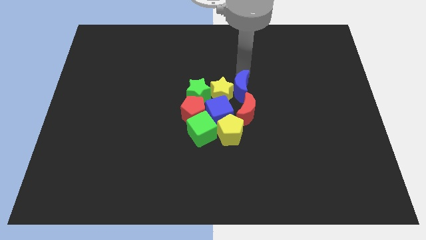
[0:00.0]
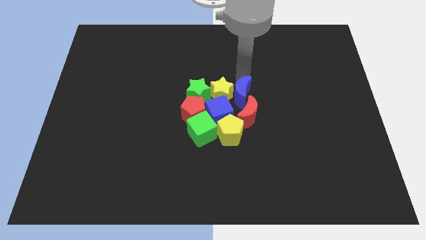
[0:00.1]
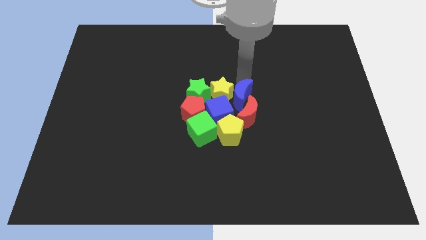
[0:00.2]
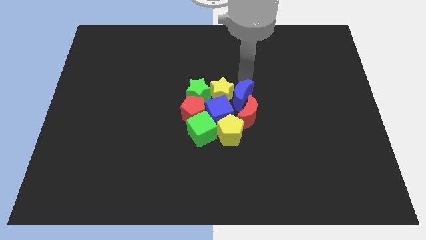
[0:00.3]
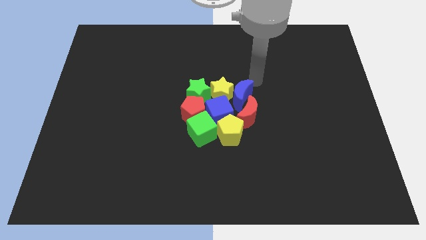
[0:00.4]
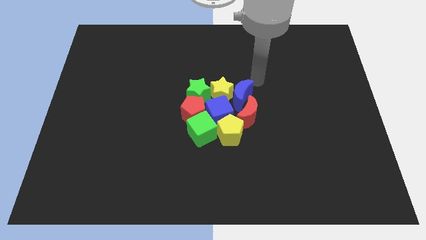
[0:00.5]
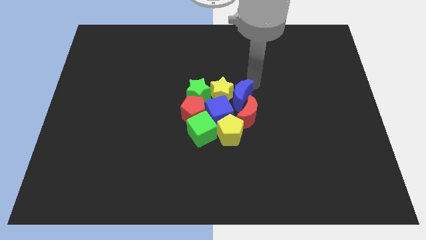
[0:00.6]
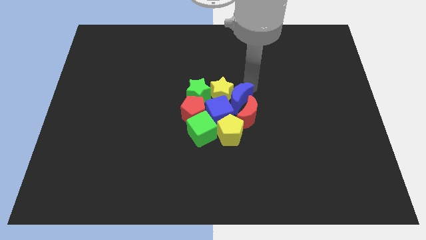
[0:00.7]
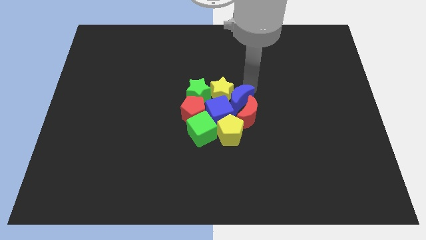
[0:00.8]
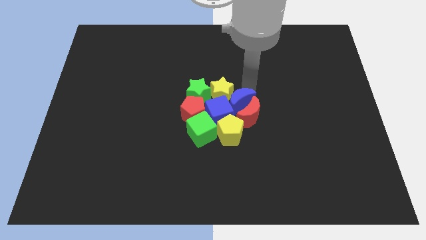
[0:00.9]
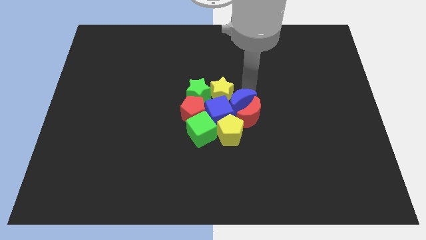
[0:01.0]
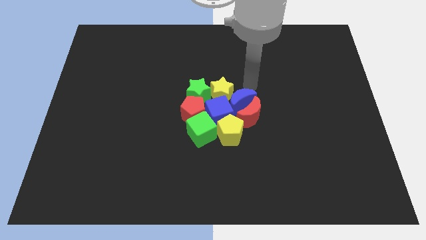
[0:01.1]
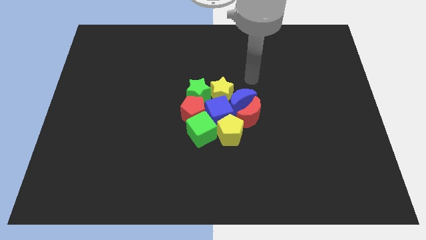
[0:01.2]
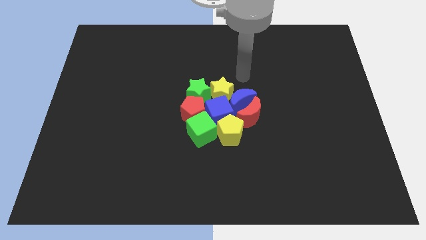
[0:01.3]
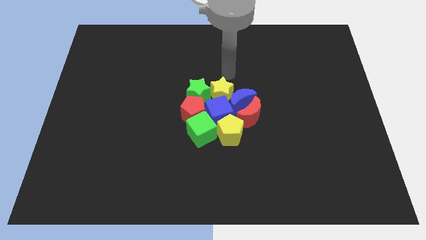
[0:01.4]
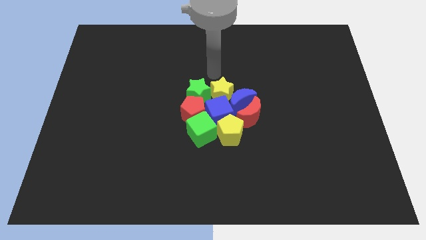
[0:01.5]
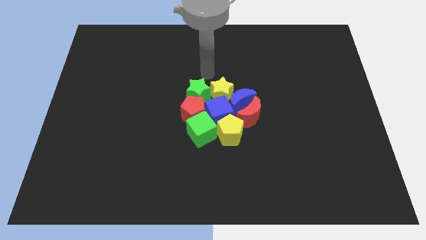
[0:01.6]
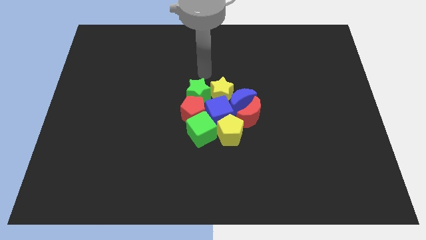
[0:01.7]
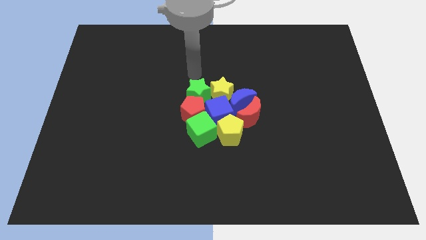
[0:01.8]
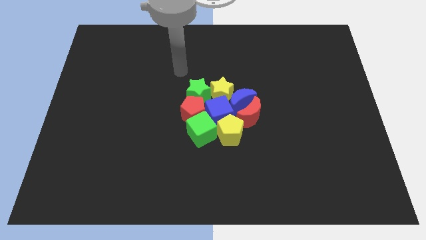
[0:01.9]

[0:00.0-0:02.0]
push the blue moon into the red moon

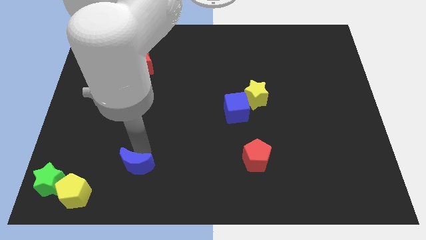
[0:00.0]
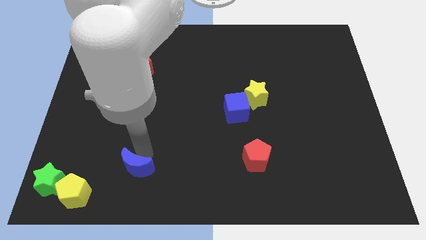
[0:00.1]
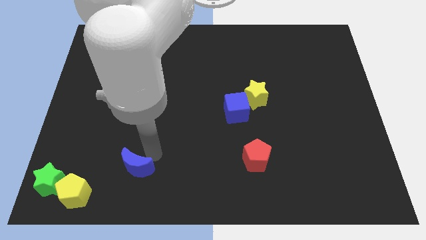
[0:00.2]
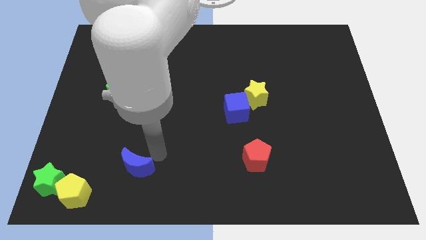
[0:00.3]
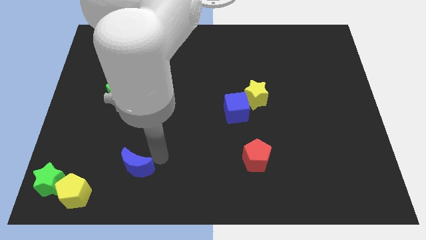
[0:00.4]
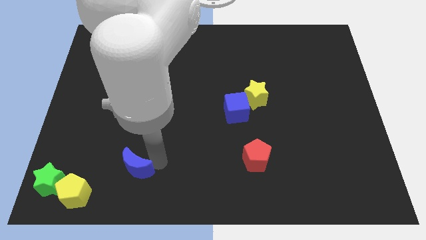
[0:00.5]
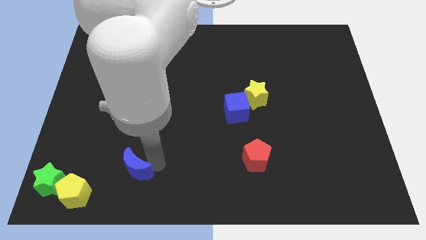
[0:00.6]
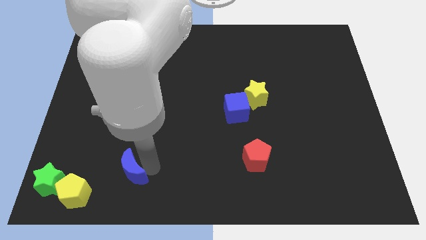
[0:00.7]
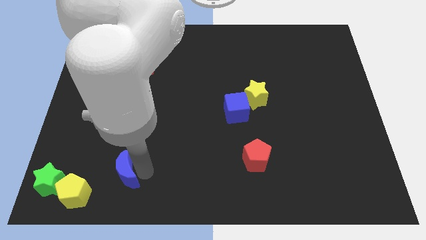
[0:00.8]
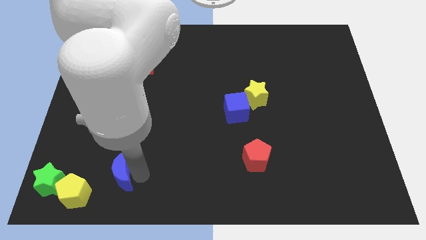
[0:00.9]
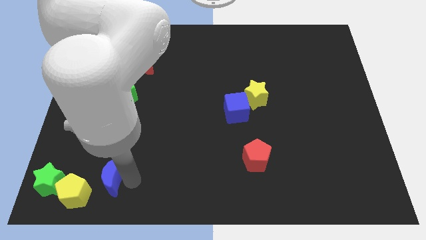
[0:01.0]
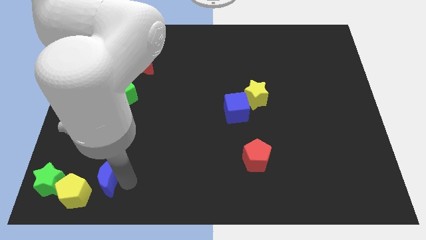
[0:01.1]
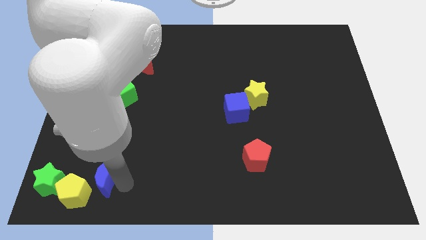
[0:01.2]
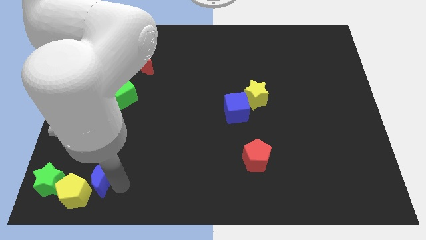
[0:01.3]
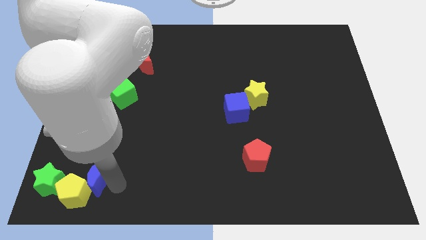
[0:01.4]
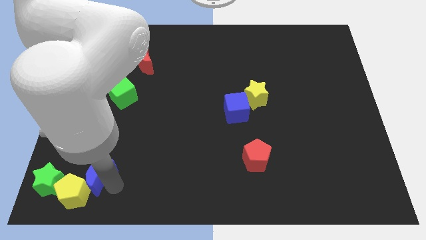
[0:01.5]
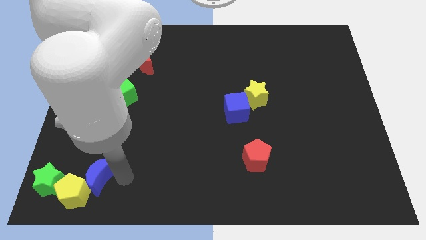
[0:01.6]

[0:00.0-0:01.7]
push the blue crescent into the yellow pentagon

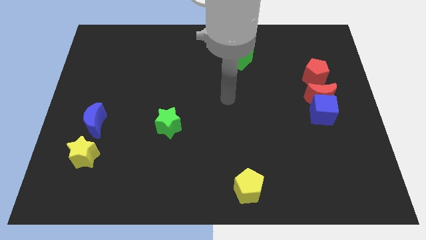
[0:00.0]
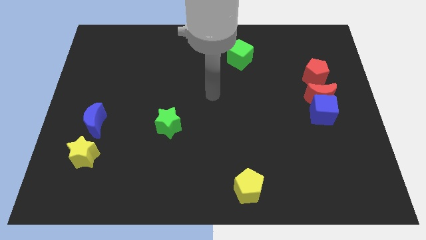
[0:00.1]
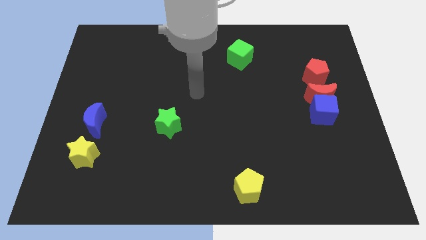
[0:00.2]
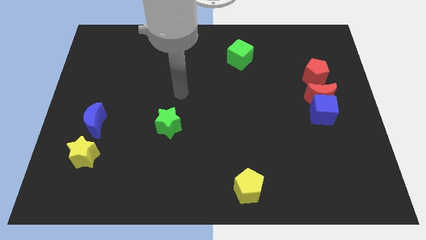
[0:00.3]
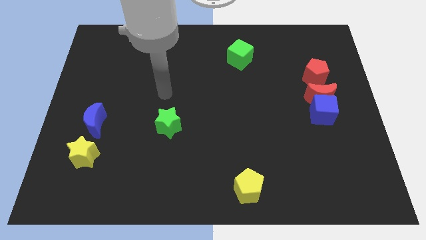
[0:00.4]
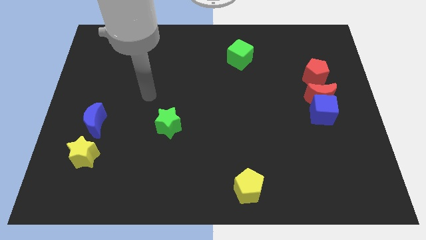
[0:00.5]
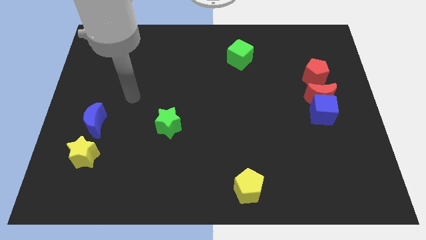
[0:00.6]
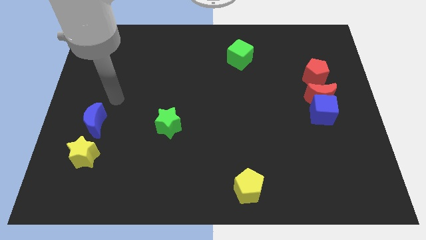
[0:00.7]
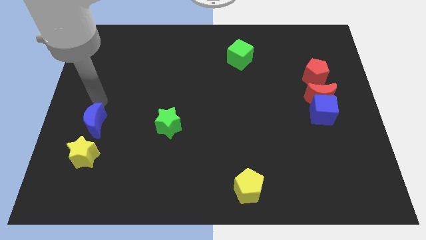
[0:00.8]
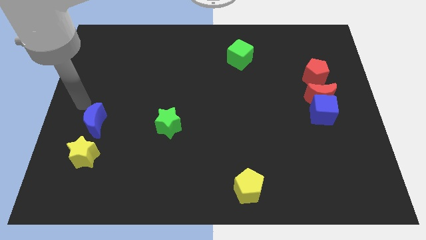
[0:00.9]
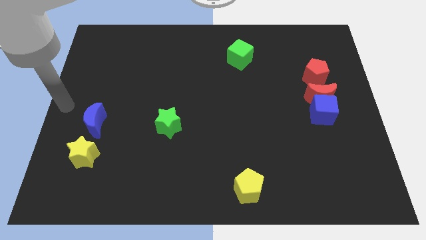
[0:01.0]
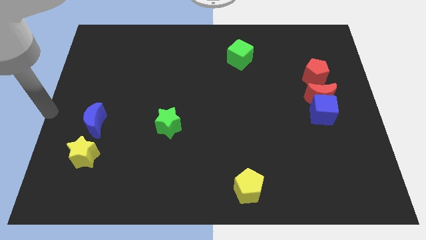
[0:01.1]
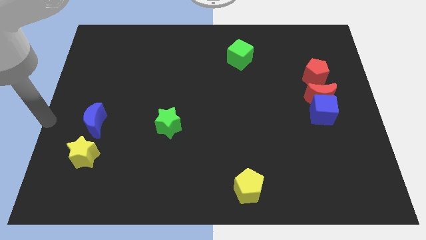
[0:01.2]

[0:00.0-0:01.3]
move your hand at the center left of the board

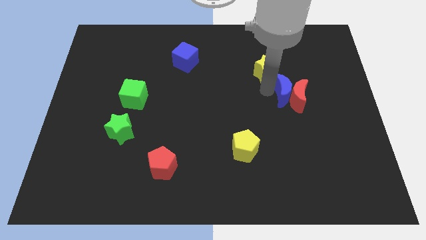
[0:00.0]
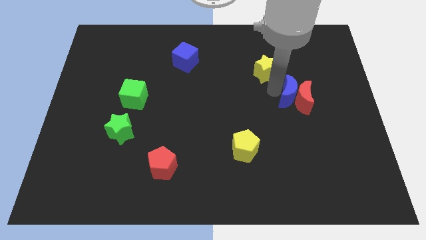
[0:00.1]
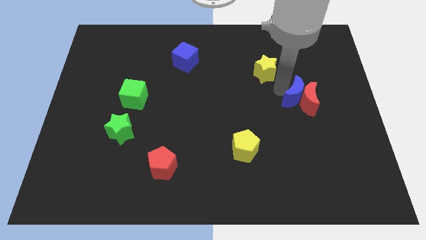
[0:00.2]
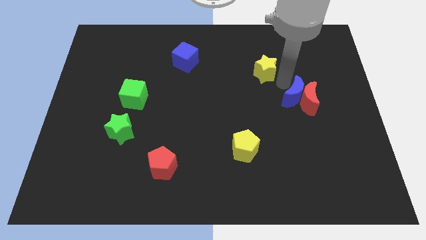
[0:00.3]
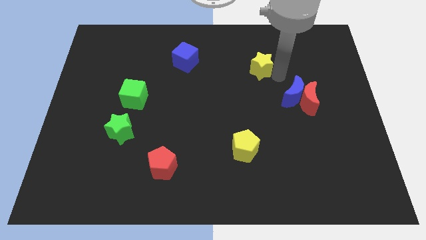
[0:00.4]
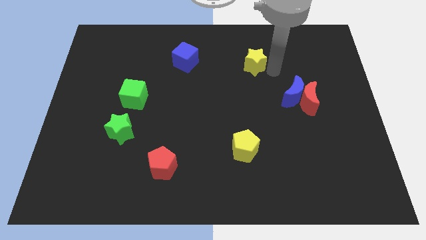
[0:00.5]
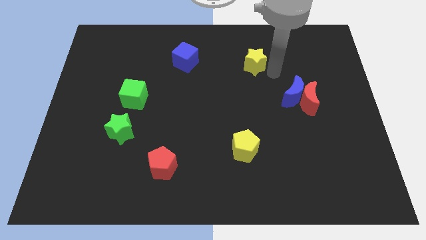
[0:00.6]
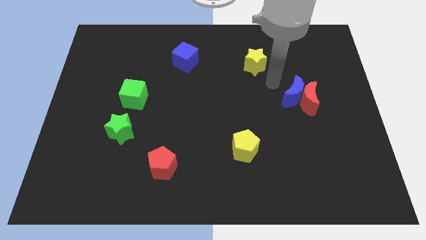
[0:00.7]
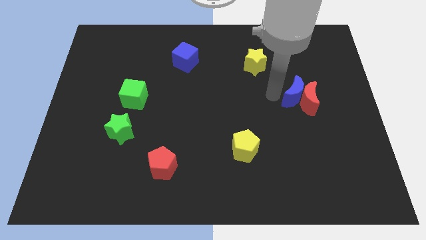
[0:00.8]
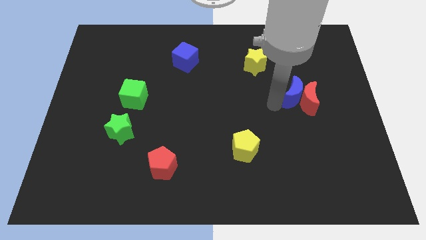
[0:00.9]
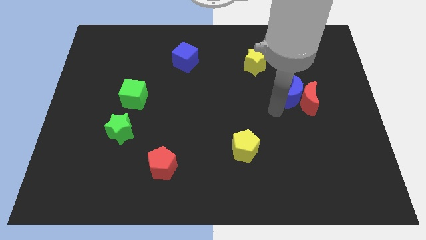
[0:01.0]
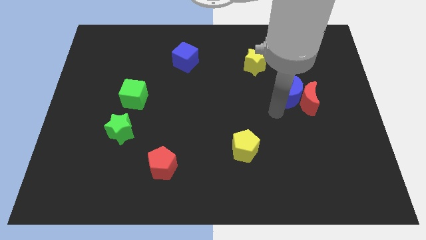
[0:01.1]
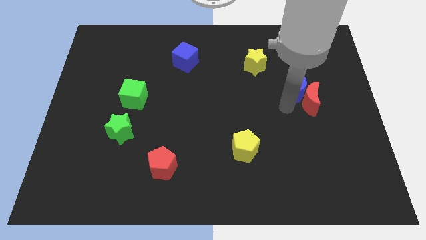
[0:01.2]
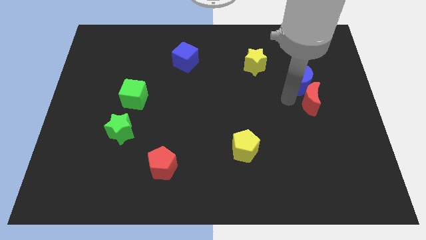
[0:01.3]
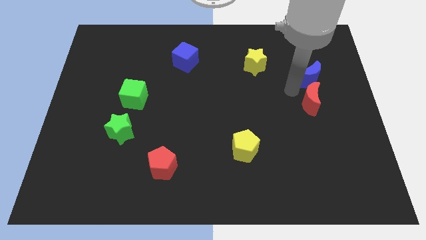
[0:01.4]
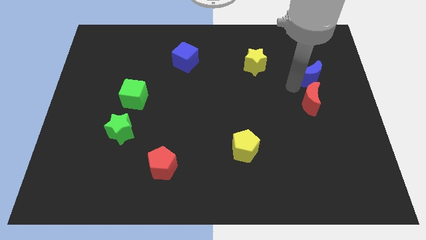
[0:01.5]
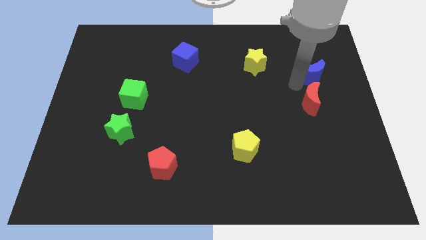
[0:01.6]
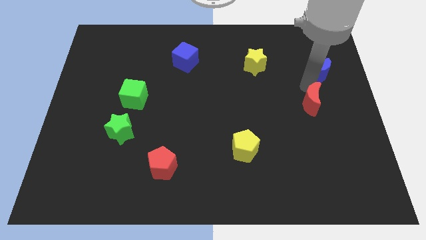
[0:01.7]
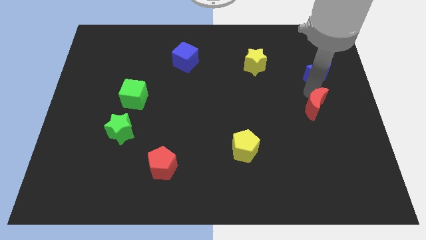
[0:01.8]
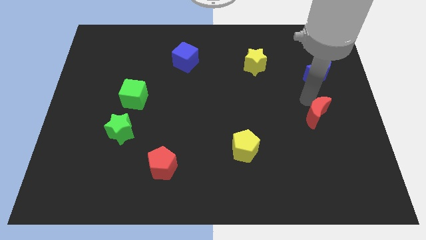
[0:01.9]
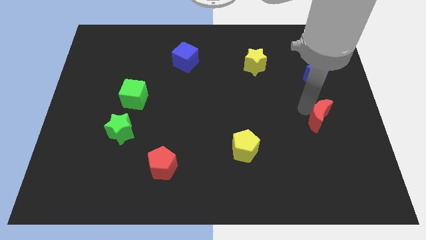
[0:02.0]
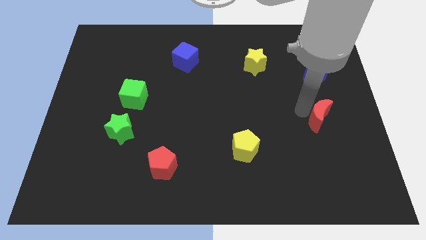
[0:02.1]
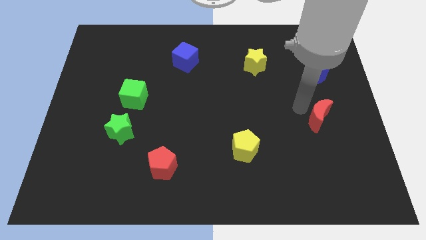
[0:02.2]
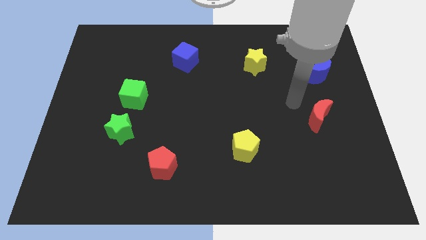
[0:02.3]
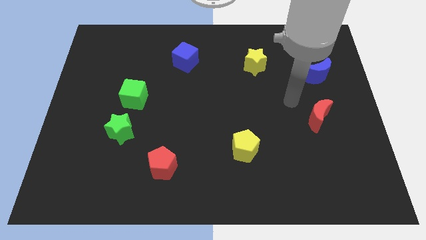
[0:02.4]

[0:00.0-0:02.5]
separate the group of blocks

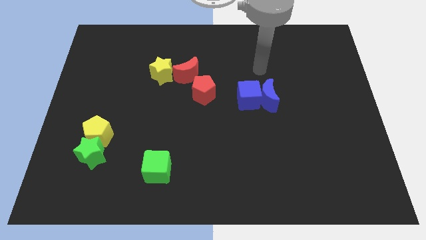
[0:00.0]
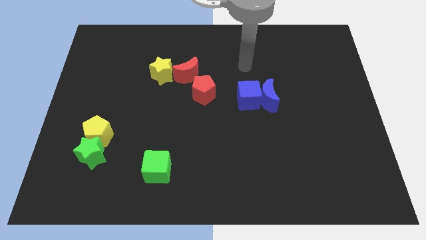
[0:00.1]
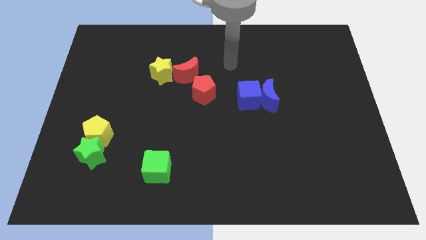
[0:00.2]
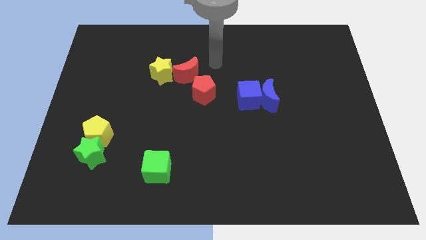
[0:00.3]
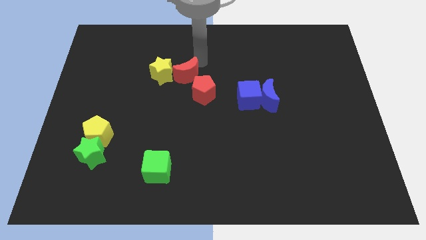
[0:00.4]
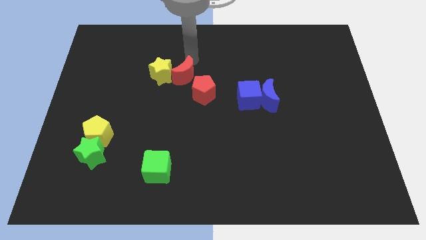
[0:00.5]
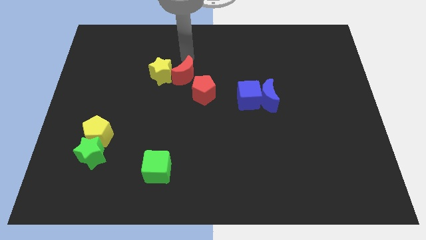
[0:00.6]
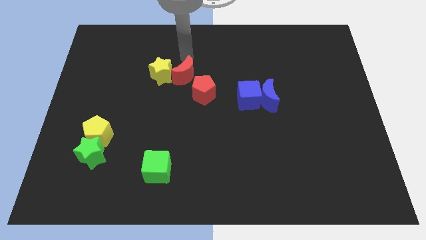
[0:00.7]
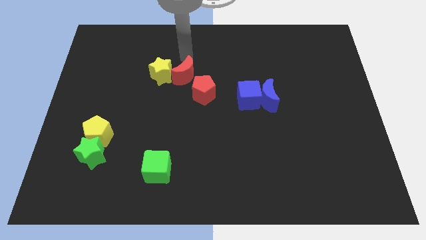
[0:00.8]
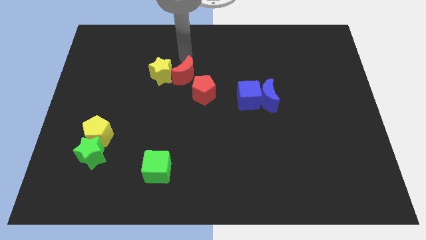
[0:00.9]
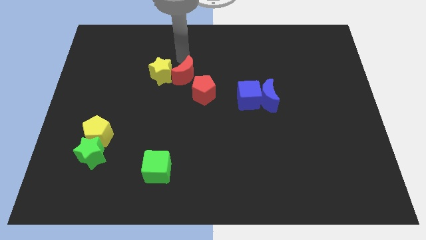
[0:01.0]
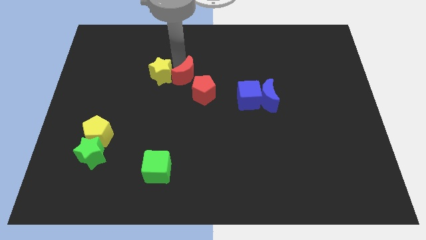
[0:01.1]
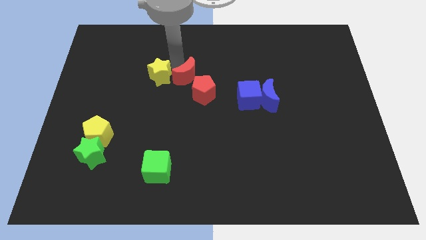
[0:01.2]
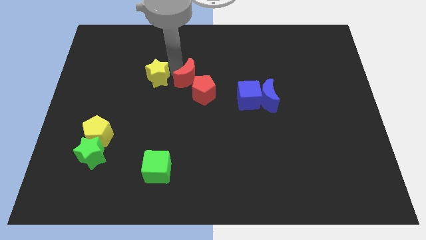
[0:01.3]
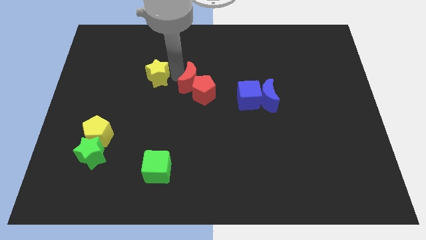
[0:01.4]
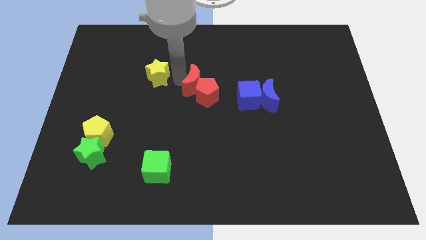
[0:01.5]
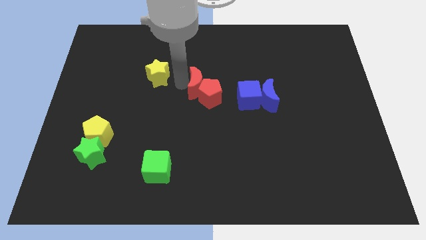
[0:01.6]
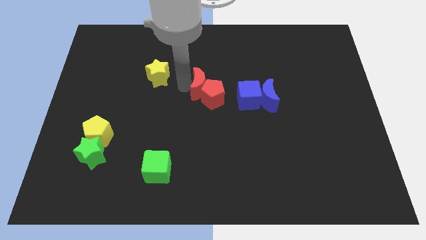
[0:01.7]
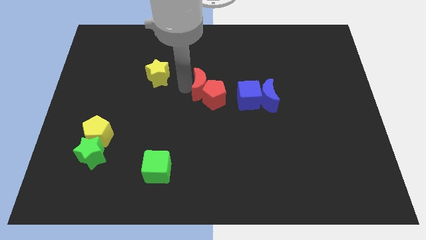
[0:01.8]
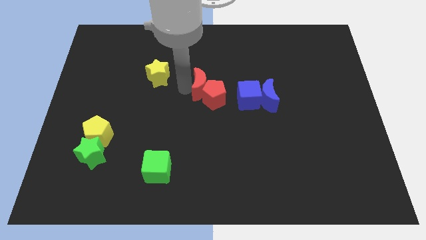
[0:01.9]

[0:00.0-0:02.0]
push the red moon into the red pentagon
